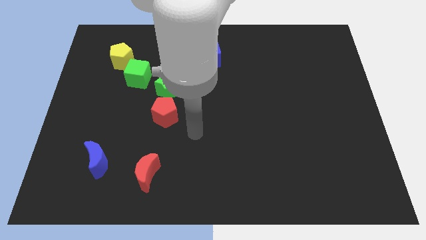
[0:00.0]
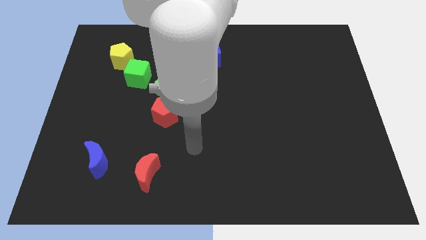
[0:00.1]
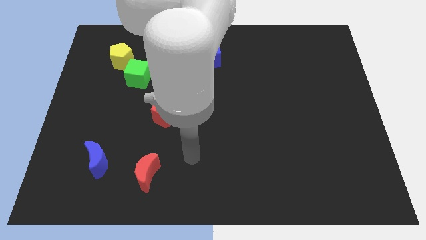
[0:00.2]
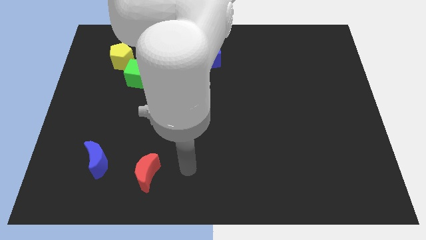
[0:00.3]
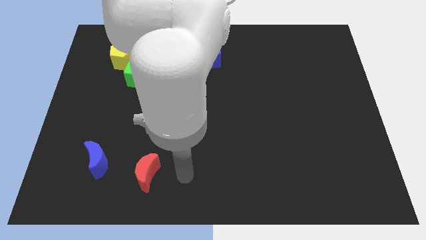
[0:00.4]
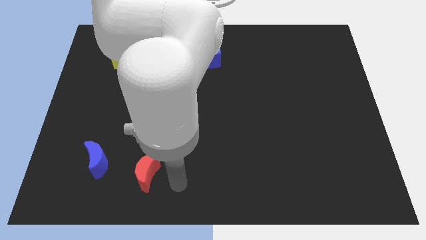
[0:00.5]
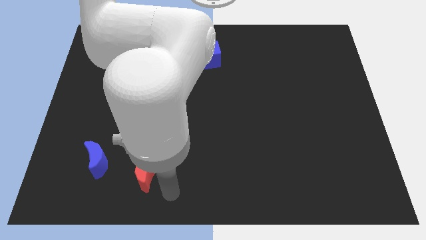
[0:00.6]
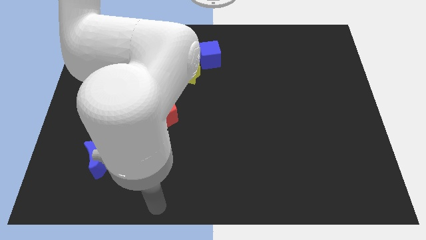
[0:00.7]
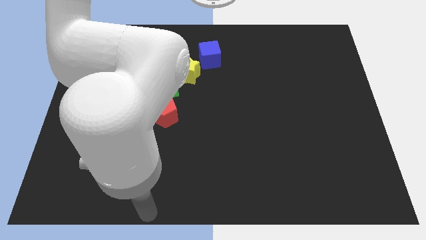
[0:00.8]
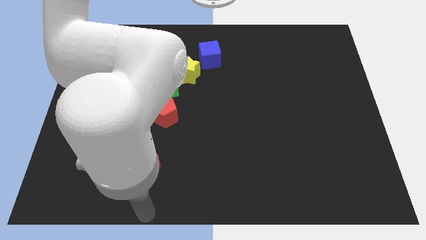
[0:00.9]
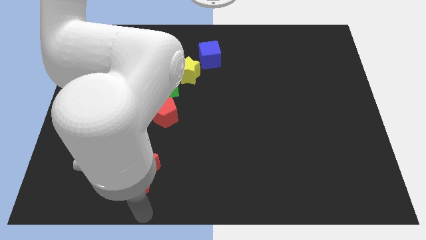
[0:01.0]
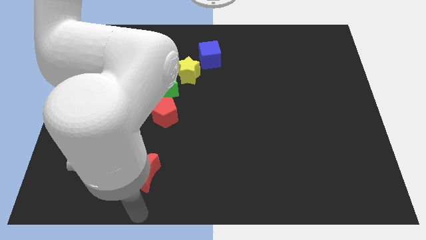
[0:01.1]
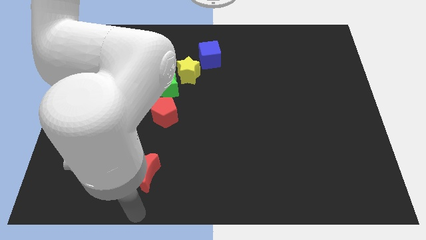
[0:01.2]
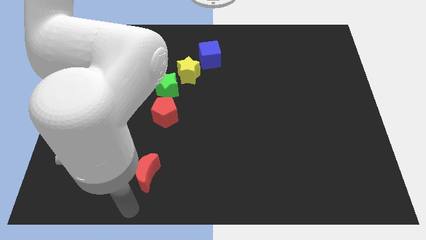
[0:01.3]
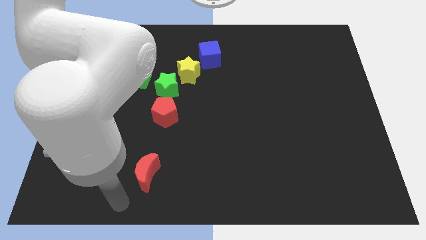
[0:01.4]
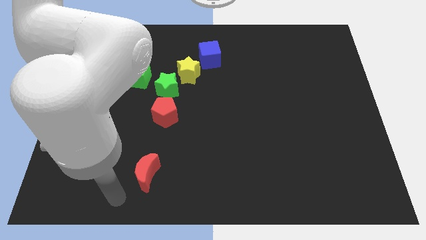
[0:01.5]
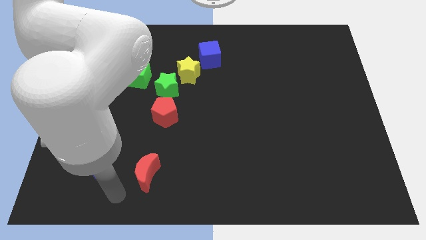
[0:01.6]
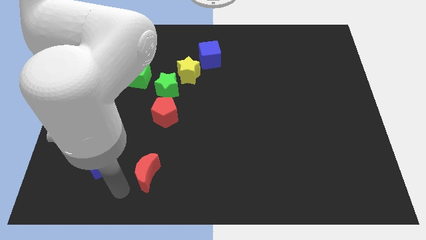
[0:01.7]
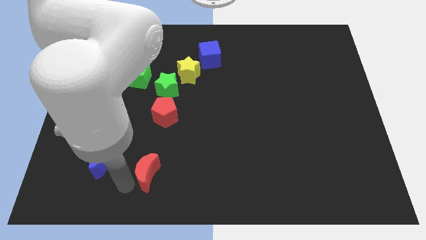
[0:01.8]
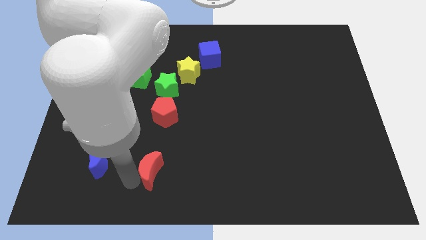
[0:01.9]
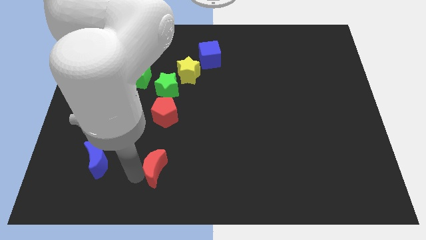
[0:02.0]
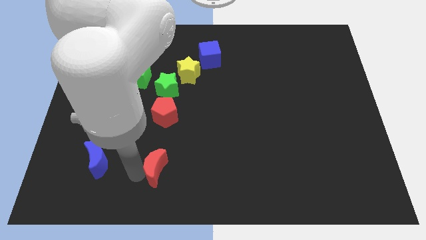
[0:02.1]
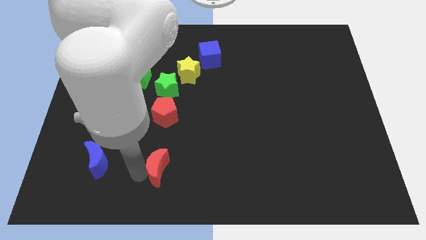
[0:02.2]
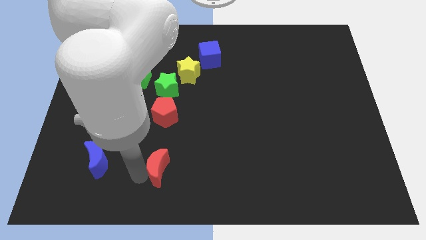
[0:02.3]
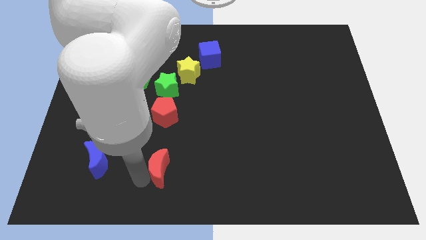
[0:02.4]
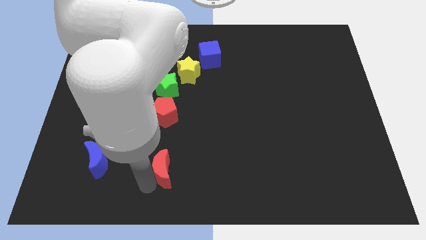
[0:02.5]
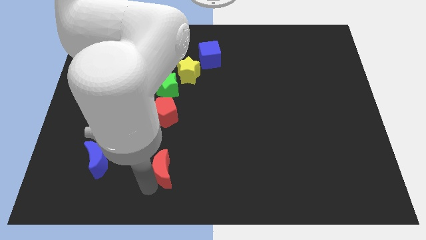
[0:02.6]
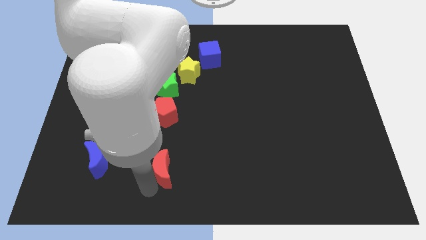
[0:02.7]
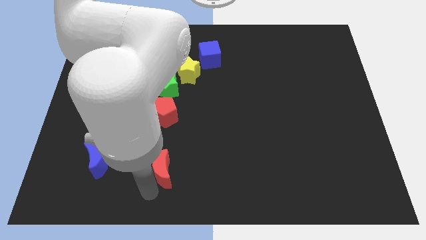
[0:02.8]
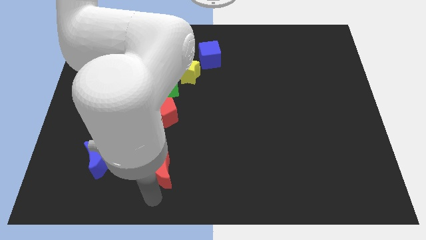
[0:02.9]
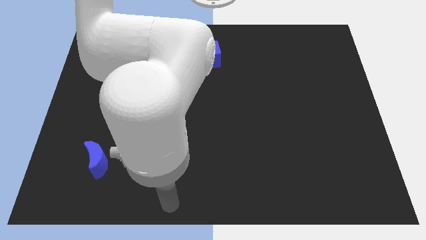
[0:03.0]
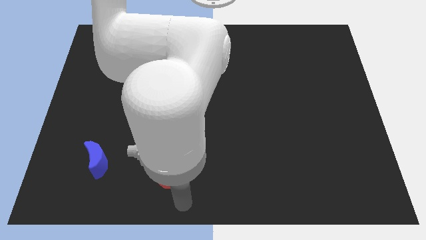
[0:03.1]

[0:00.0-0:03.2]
move red moon slightly to the right

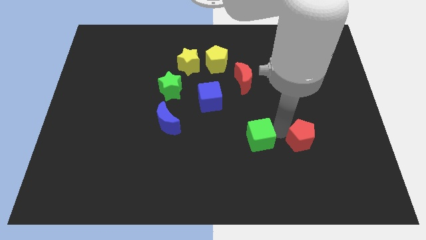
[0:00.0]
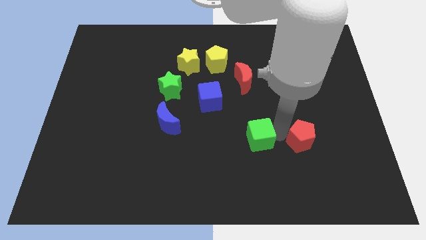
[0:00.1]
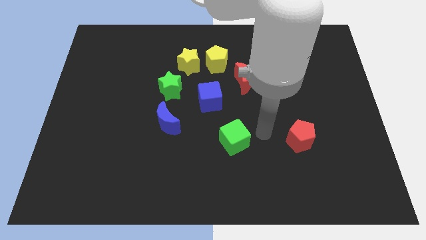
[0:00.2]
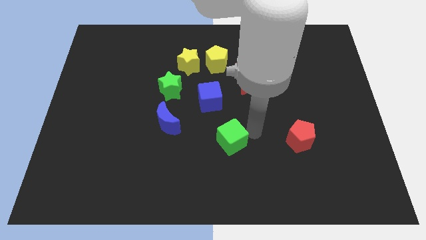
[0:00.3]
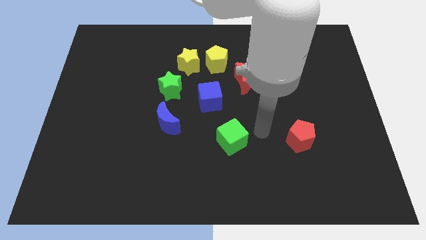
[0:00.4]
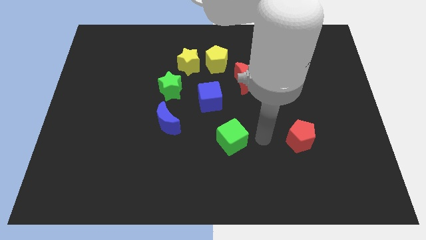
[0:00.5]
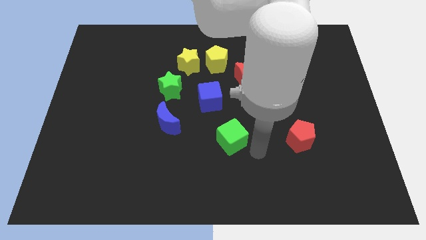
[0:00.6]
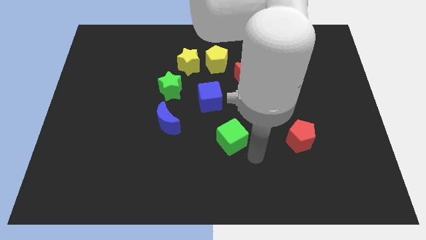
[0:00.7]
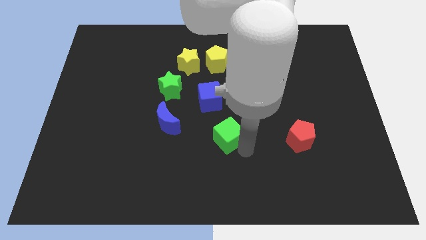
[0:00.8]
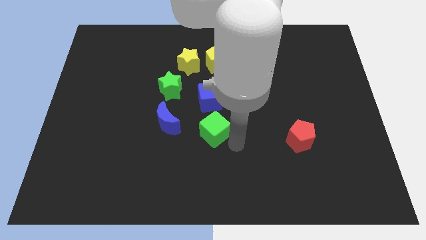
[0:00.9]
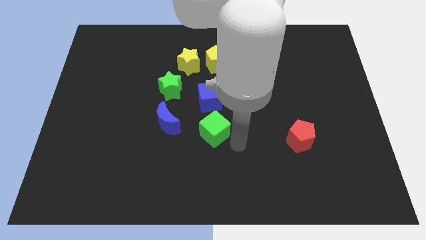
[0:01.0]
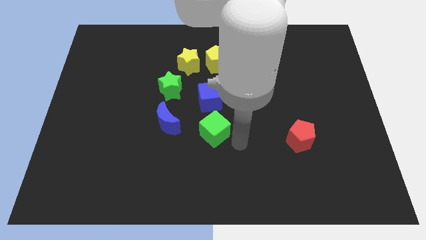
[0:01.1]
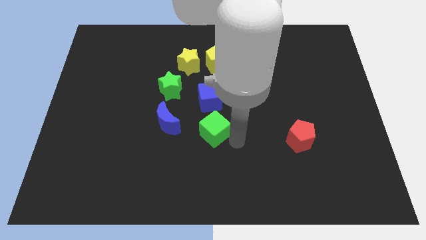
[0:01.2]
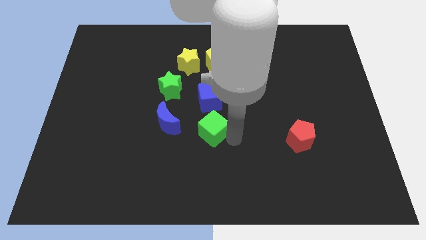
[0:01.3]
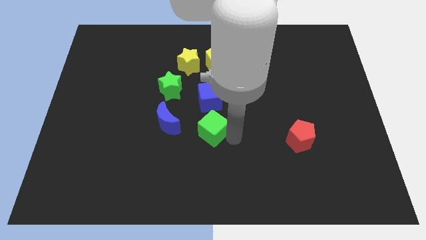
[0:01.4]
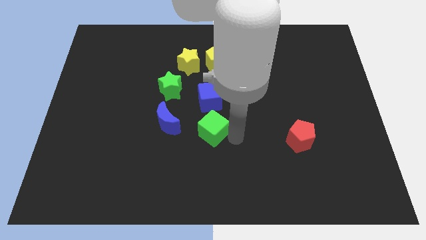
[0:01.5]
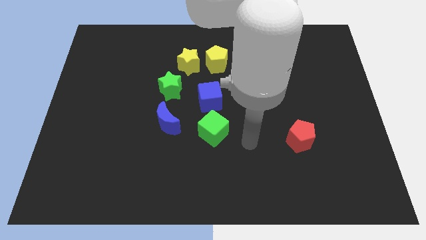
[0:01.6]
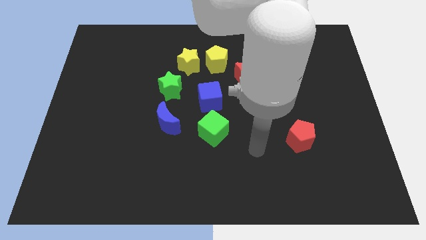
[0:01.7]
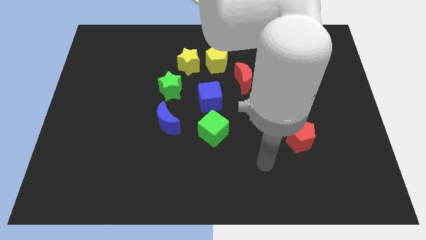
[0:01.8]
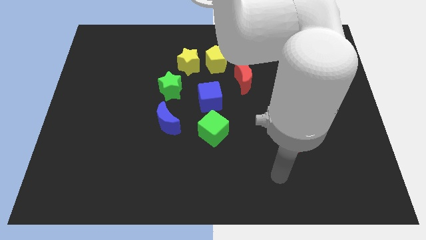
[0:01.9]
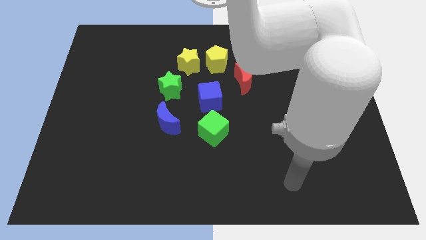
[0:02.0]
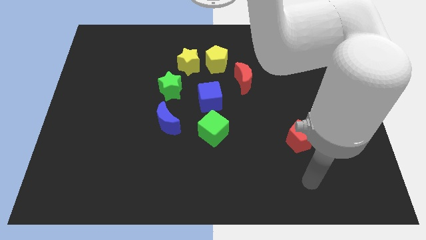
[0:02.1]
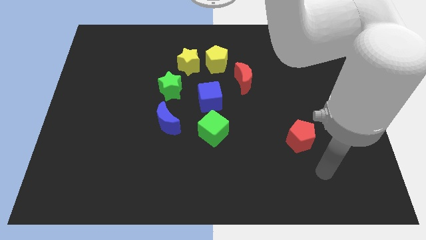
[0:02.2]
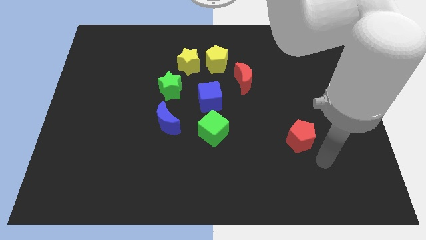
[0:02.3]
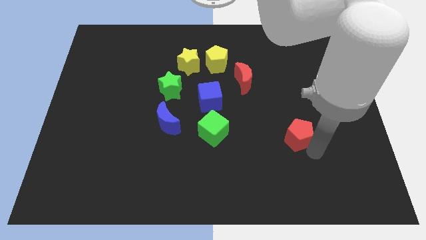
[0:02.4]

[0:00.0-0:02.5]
push the green cube to the bottom of the blue cube

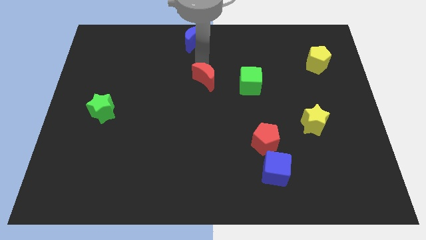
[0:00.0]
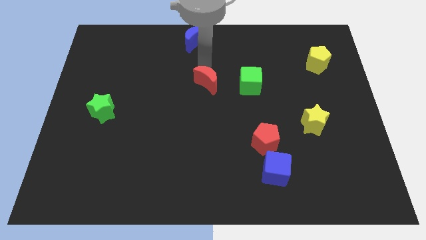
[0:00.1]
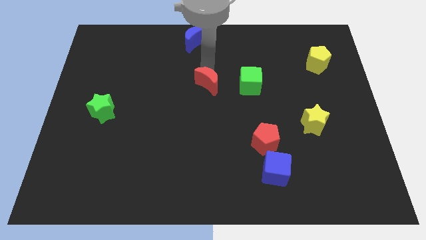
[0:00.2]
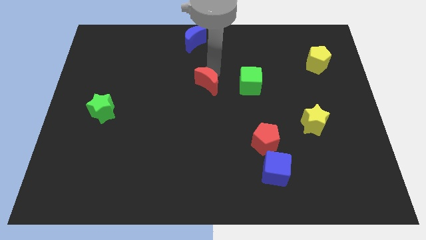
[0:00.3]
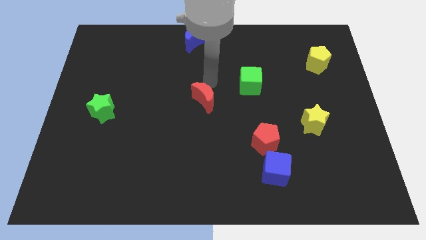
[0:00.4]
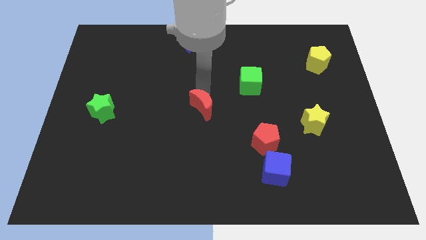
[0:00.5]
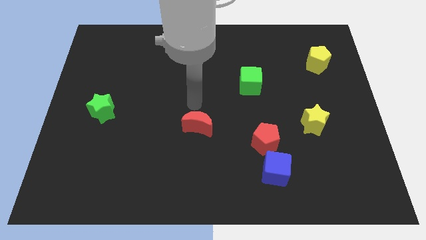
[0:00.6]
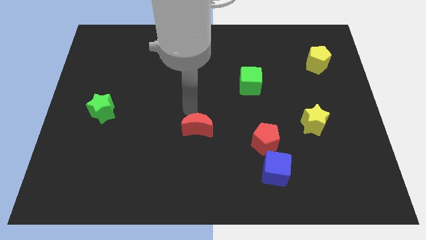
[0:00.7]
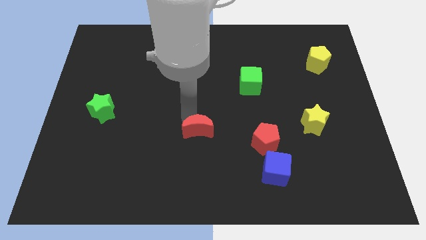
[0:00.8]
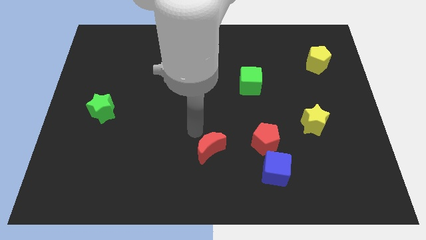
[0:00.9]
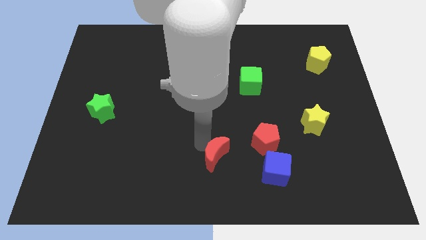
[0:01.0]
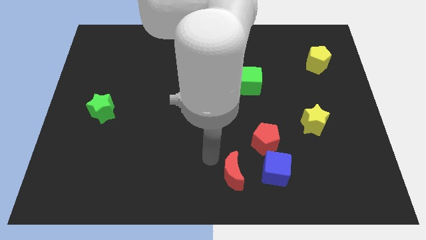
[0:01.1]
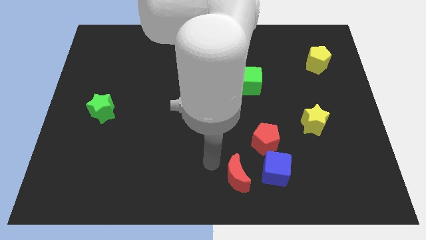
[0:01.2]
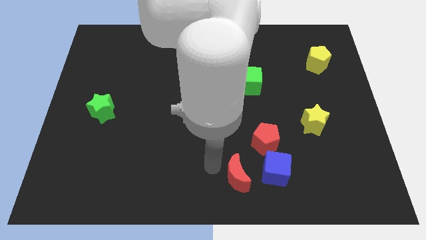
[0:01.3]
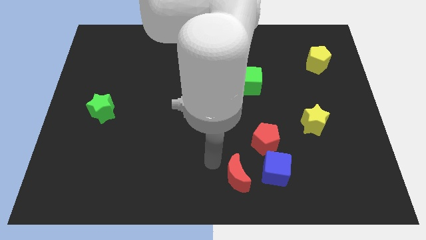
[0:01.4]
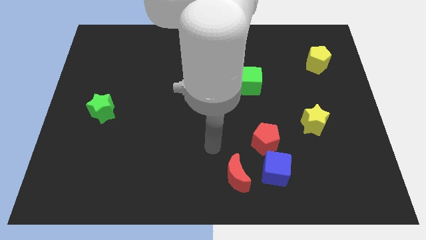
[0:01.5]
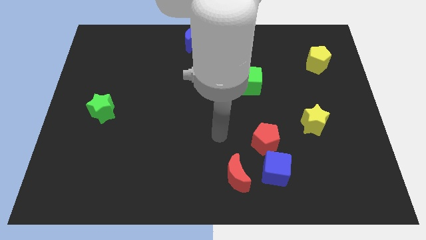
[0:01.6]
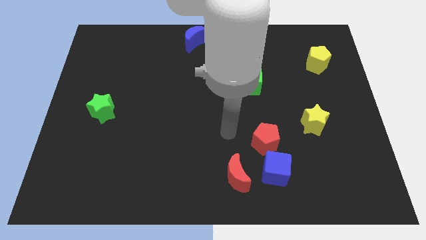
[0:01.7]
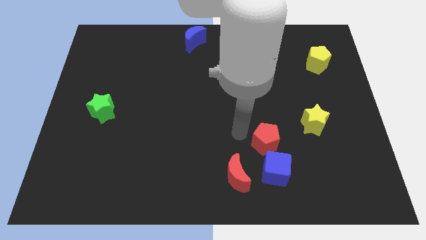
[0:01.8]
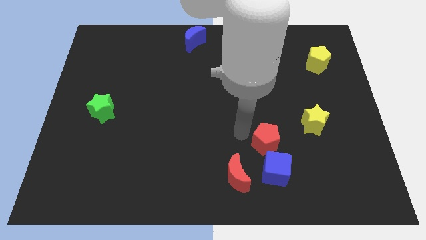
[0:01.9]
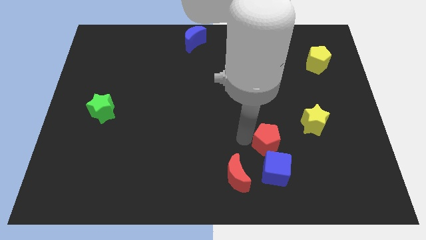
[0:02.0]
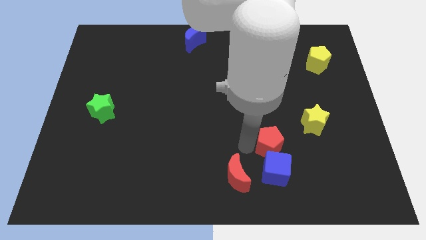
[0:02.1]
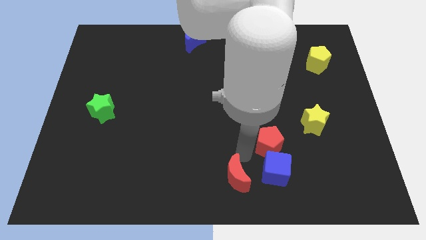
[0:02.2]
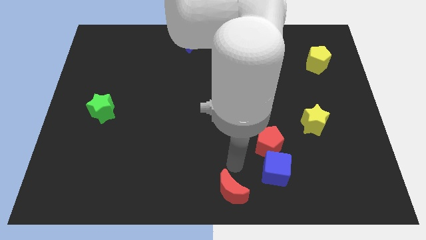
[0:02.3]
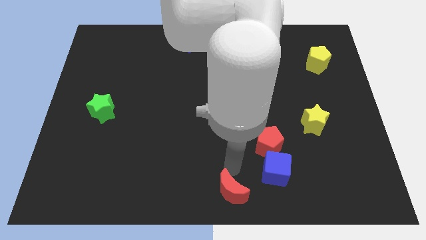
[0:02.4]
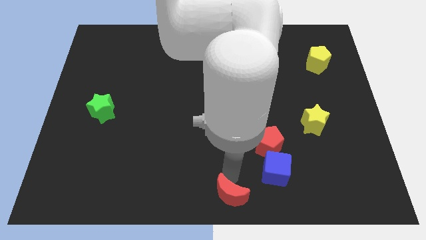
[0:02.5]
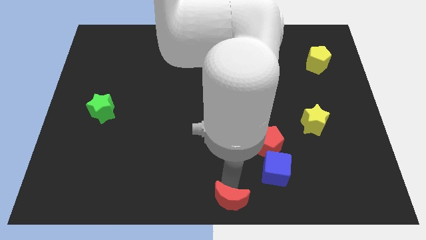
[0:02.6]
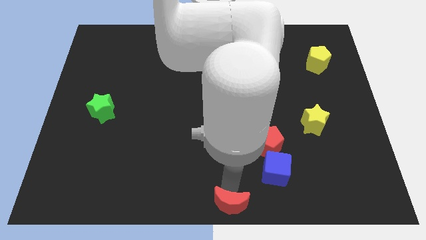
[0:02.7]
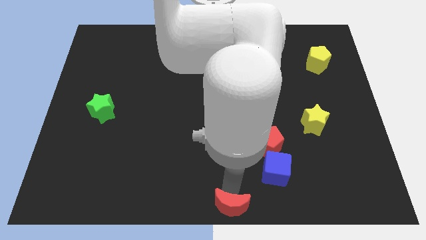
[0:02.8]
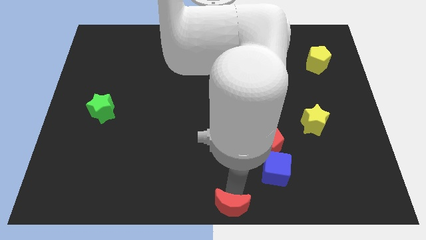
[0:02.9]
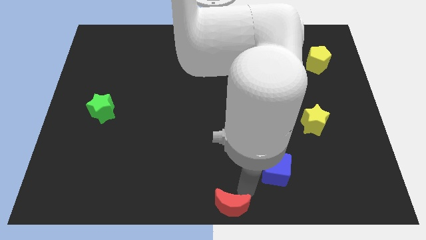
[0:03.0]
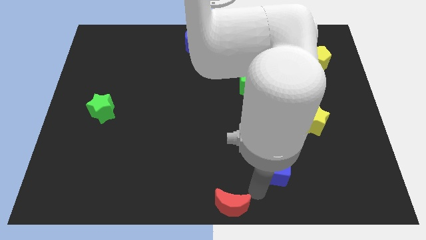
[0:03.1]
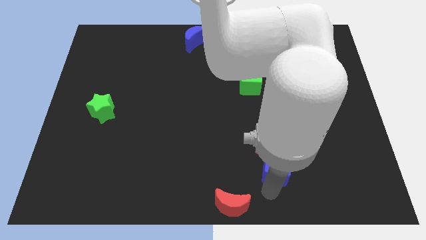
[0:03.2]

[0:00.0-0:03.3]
place red crescent to the bottom end
